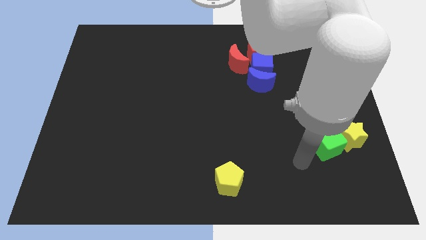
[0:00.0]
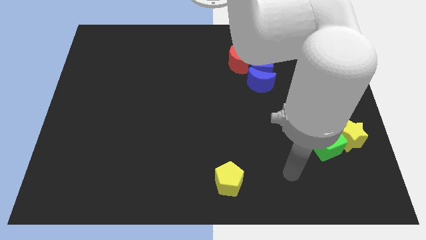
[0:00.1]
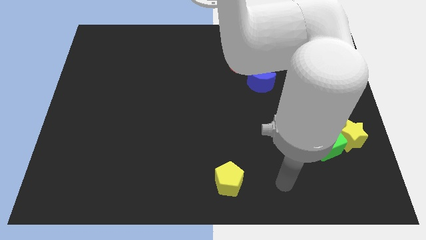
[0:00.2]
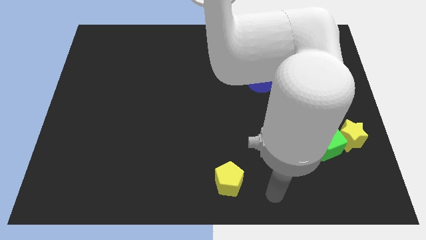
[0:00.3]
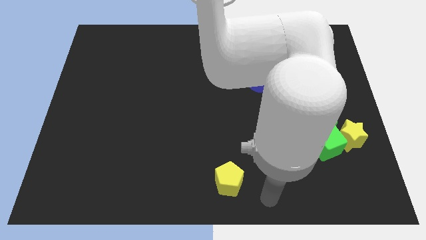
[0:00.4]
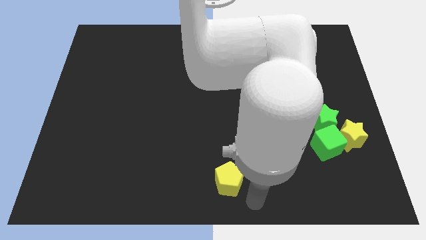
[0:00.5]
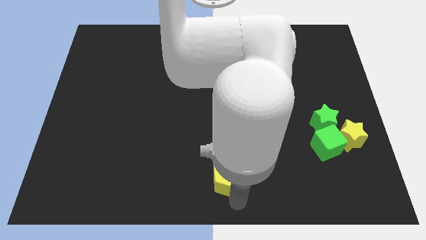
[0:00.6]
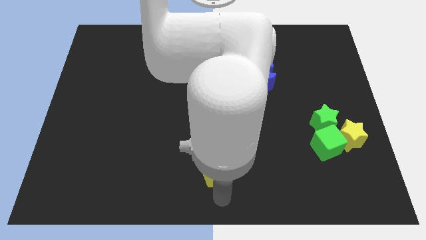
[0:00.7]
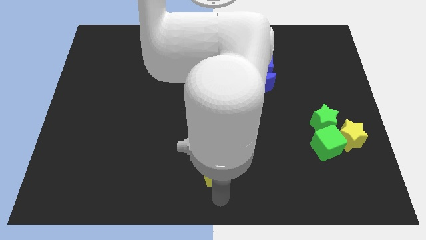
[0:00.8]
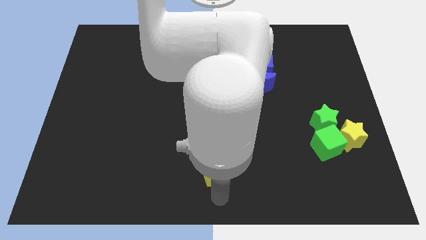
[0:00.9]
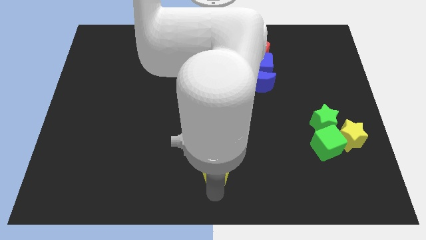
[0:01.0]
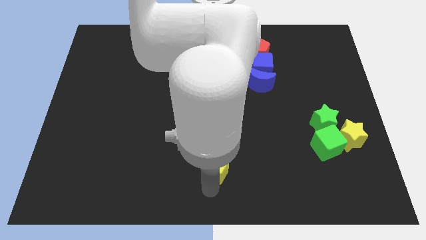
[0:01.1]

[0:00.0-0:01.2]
move your arm around the yellow pentagon

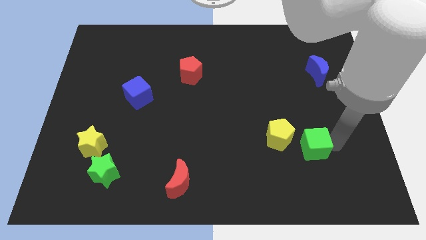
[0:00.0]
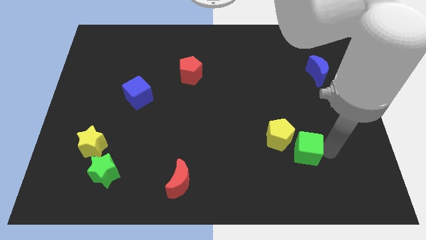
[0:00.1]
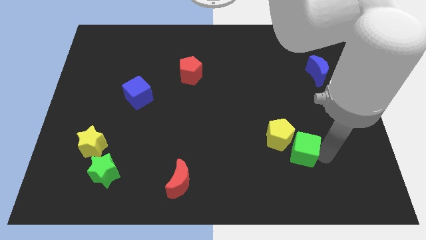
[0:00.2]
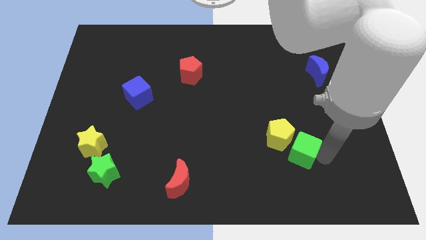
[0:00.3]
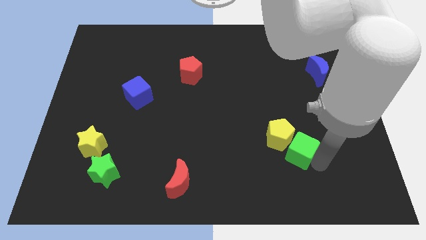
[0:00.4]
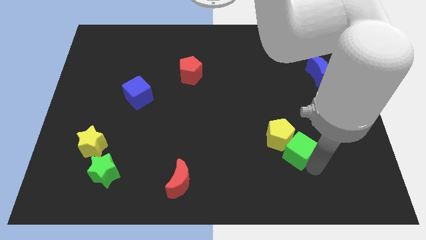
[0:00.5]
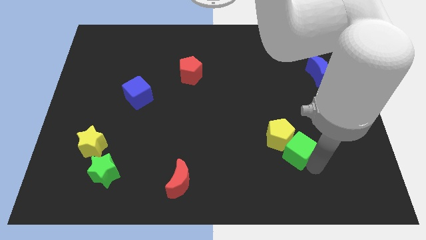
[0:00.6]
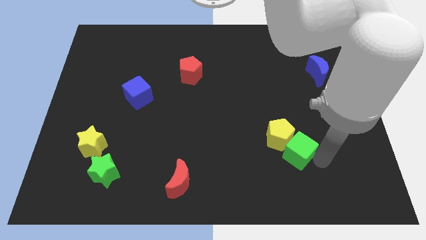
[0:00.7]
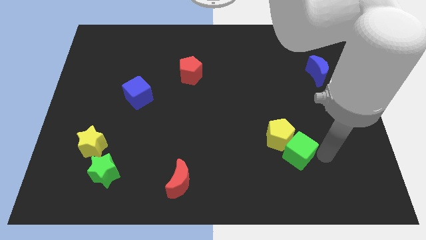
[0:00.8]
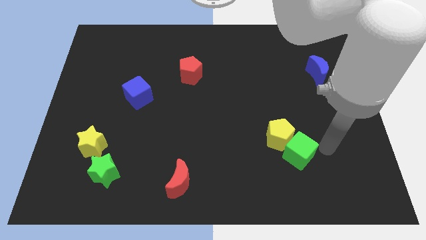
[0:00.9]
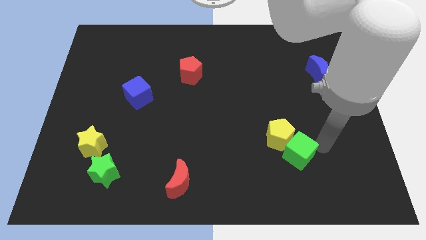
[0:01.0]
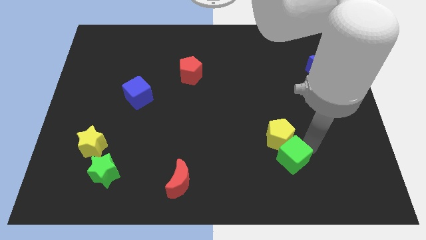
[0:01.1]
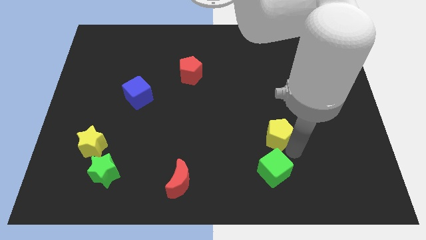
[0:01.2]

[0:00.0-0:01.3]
push the green cube to the bottom of the yellow pentagon

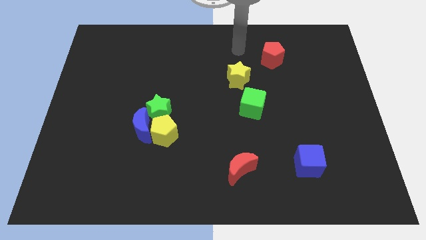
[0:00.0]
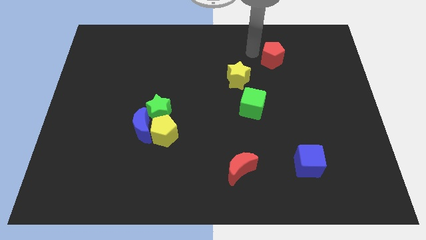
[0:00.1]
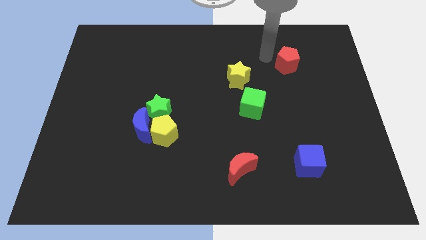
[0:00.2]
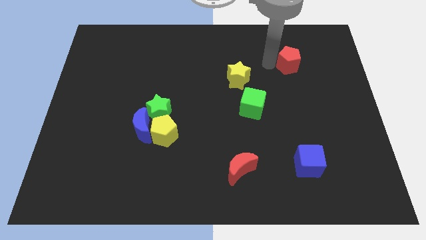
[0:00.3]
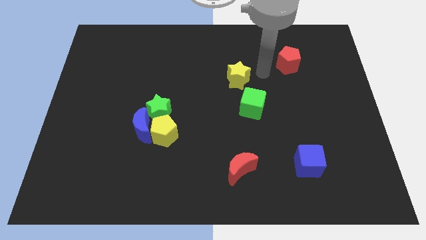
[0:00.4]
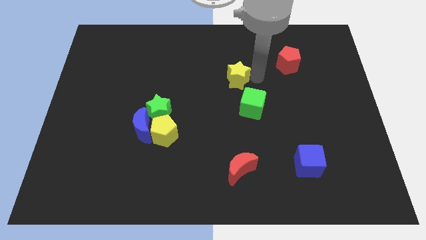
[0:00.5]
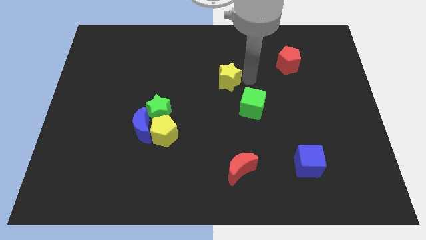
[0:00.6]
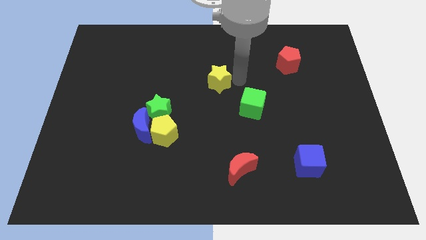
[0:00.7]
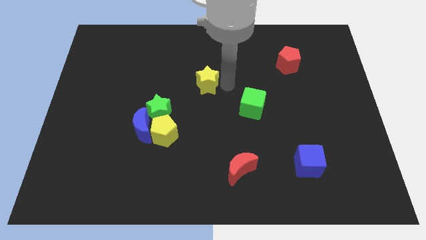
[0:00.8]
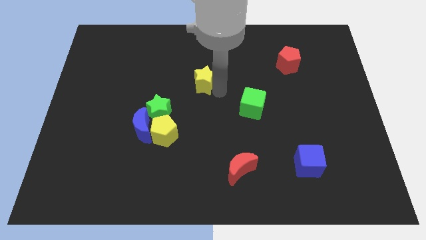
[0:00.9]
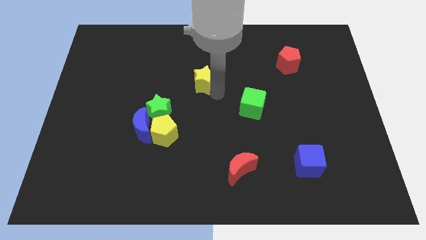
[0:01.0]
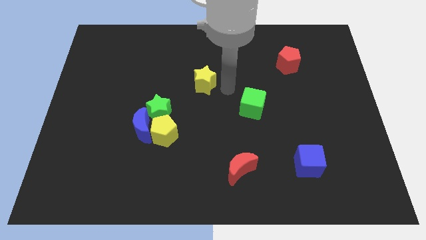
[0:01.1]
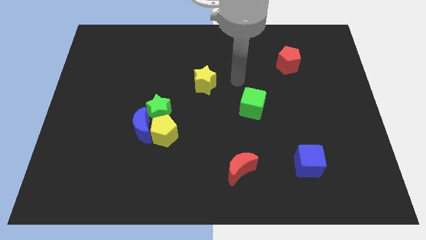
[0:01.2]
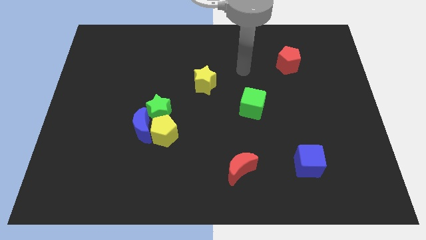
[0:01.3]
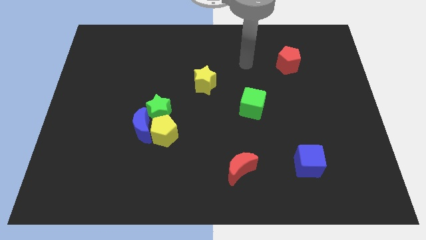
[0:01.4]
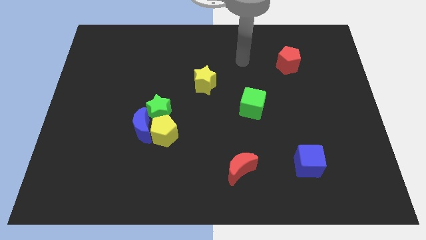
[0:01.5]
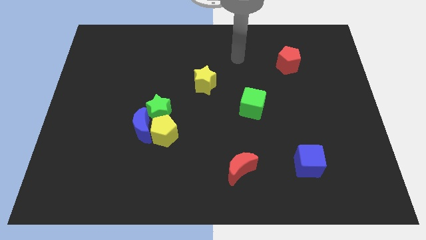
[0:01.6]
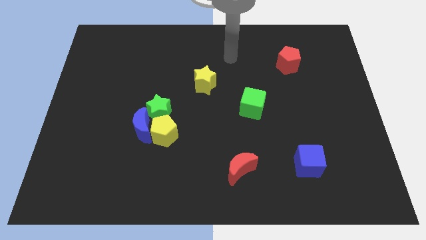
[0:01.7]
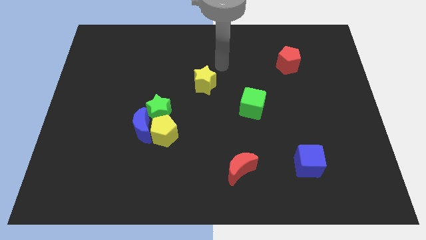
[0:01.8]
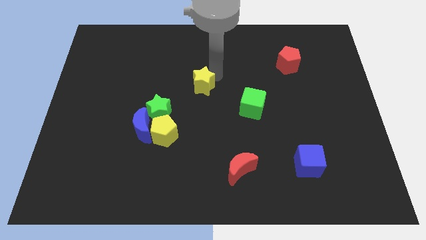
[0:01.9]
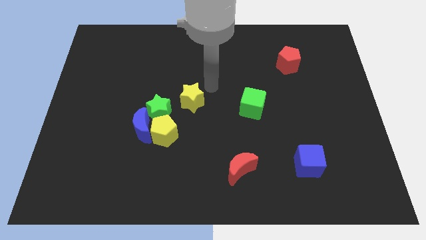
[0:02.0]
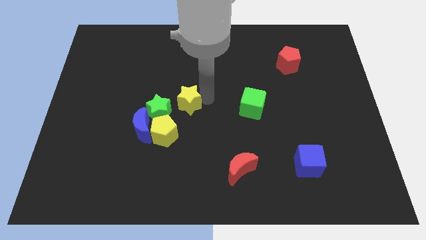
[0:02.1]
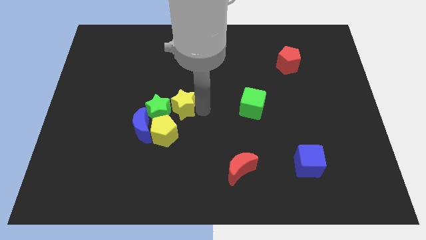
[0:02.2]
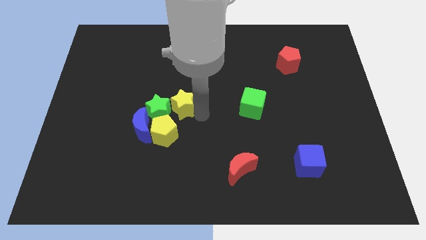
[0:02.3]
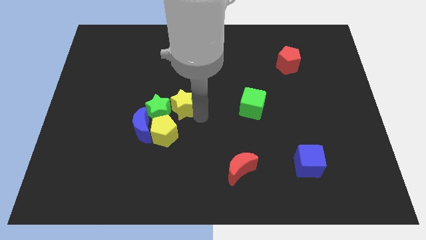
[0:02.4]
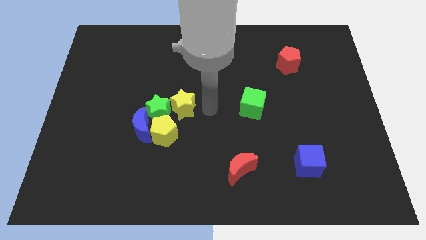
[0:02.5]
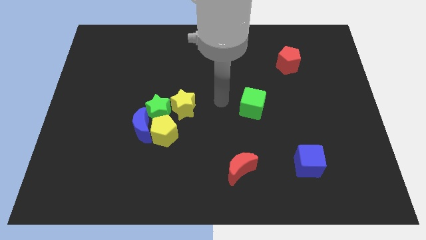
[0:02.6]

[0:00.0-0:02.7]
drag the yellow star beside the green star

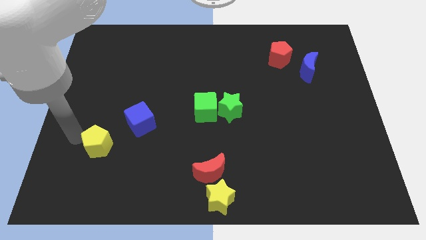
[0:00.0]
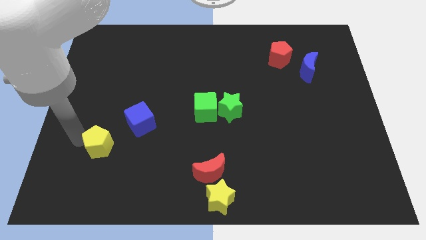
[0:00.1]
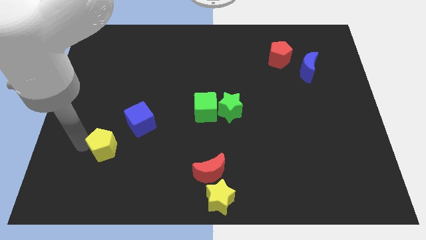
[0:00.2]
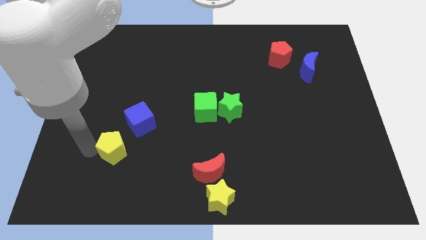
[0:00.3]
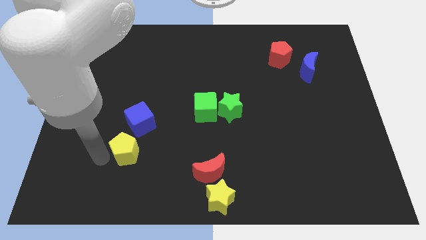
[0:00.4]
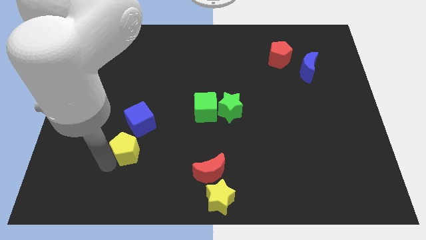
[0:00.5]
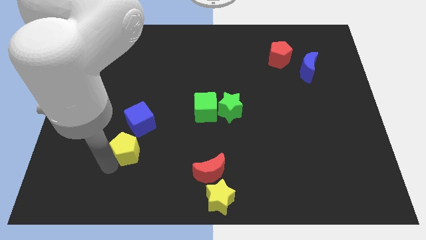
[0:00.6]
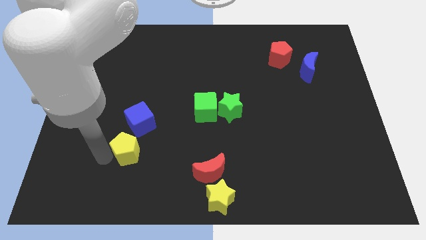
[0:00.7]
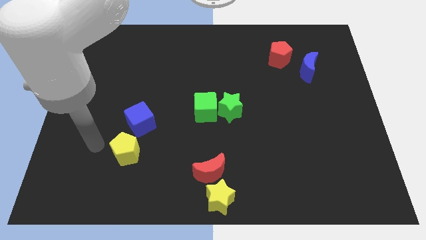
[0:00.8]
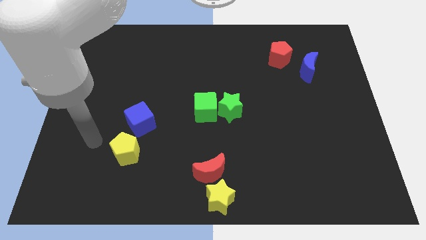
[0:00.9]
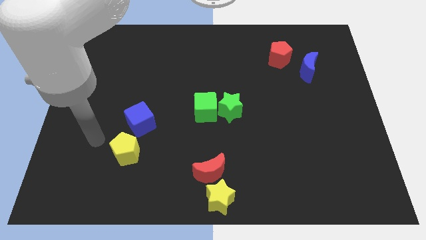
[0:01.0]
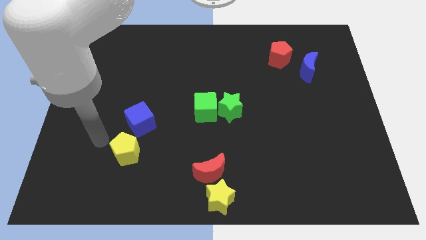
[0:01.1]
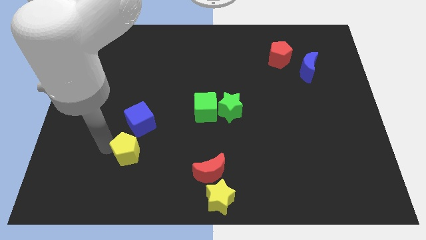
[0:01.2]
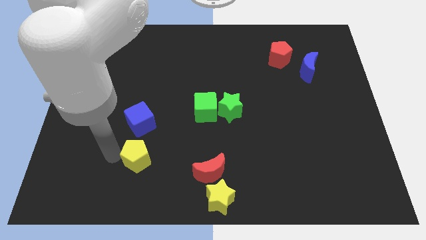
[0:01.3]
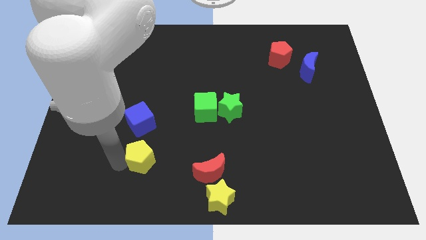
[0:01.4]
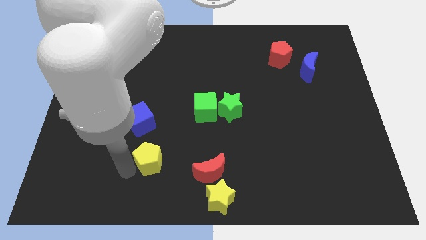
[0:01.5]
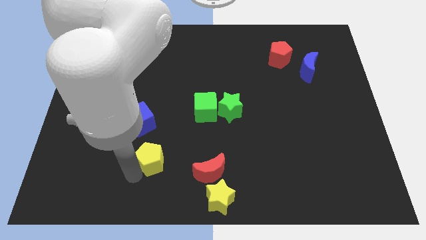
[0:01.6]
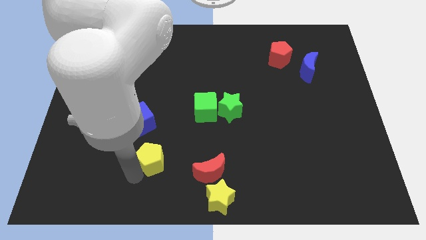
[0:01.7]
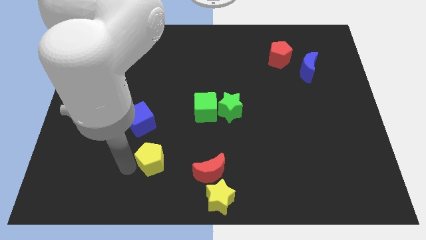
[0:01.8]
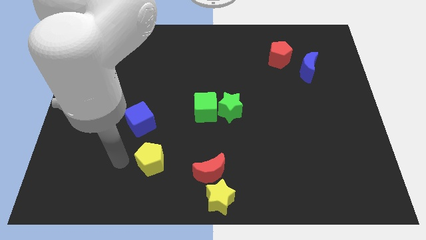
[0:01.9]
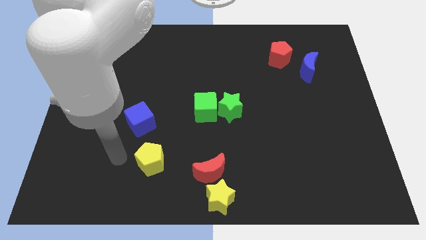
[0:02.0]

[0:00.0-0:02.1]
drag the yellow pentagon to the right

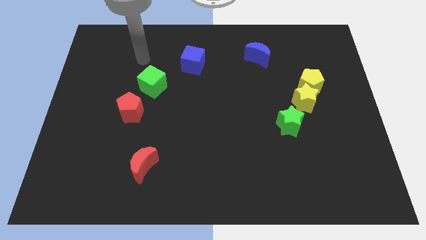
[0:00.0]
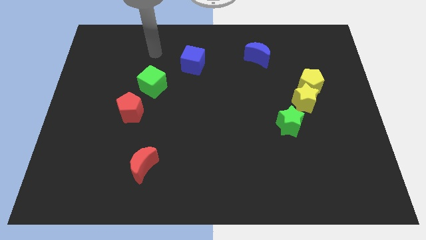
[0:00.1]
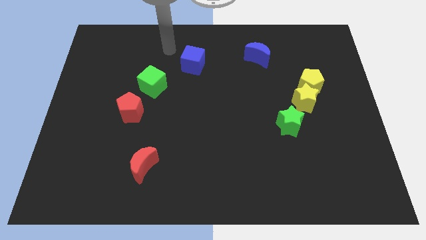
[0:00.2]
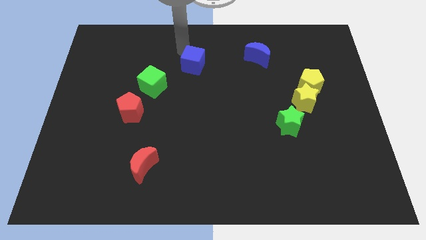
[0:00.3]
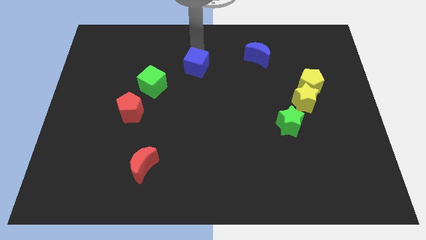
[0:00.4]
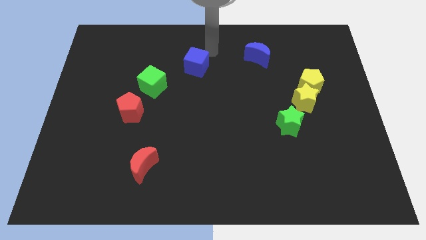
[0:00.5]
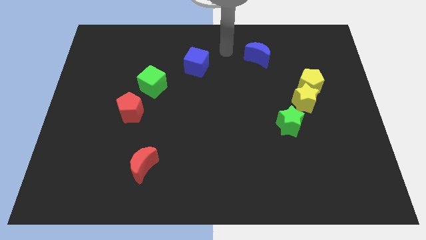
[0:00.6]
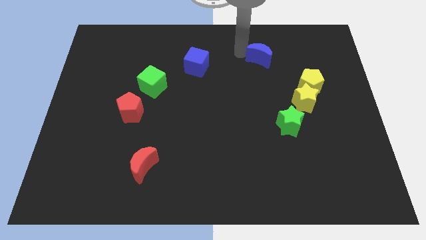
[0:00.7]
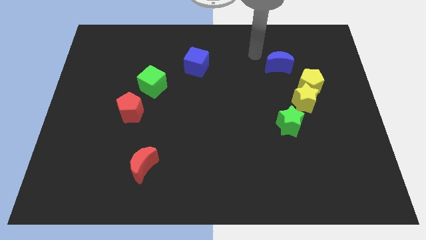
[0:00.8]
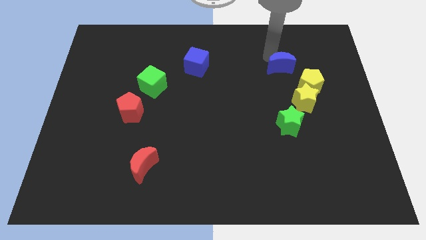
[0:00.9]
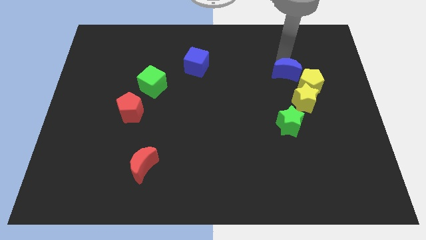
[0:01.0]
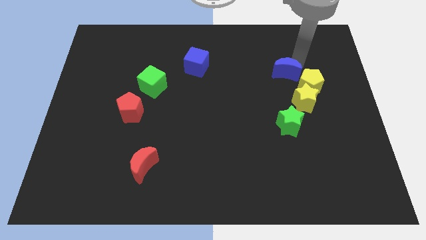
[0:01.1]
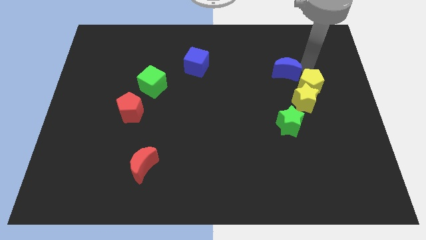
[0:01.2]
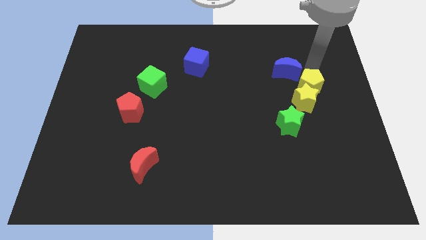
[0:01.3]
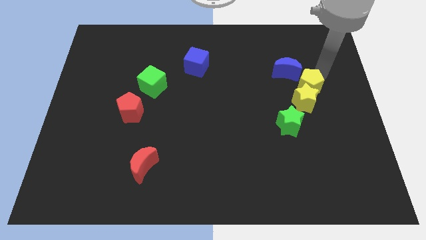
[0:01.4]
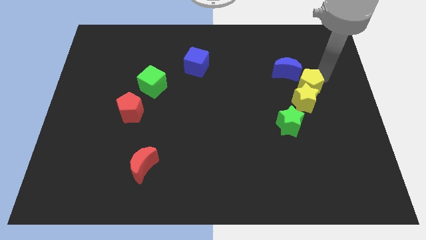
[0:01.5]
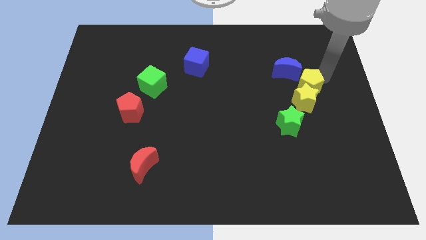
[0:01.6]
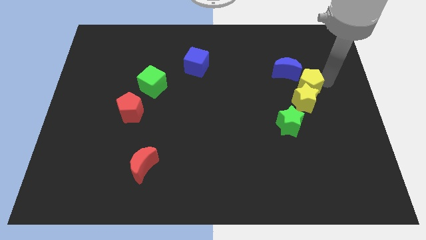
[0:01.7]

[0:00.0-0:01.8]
move away from the green cube
